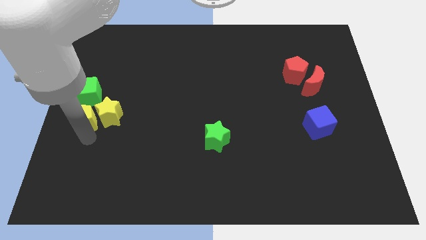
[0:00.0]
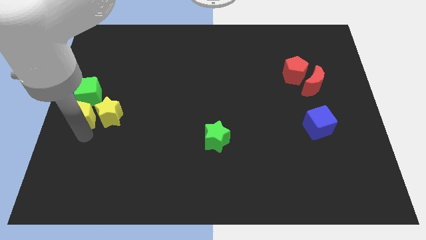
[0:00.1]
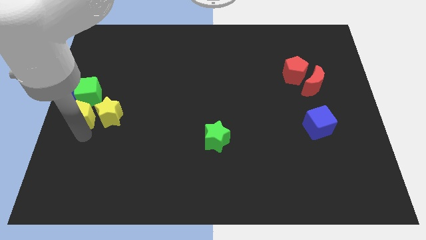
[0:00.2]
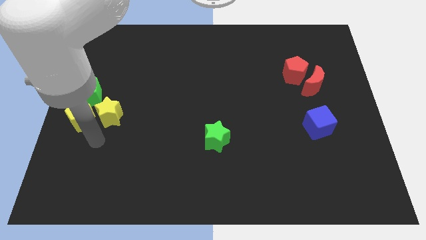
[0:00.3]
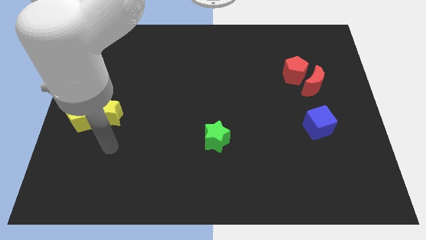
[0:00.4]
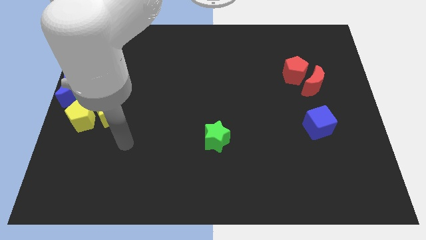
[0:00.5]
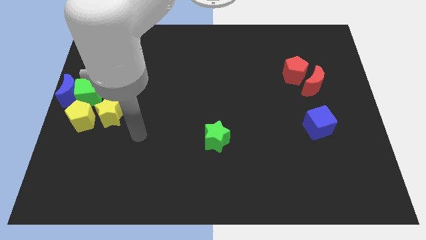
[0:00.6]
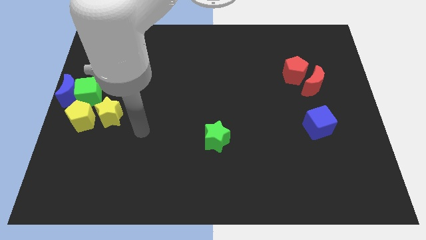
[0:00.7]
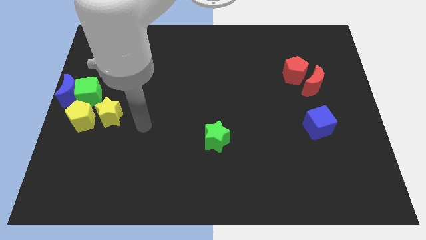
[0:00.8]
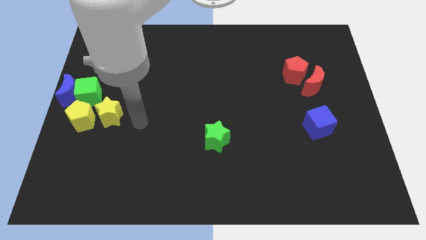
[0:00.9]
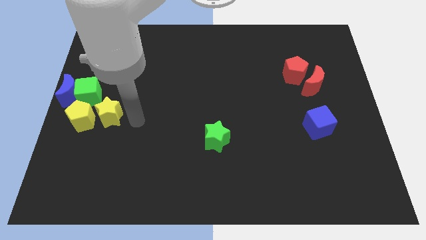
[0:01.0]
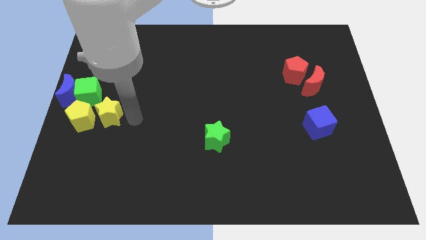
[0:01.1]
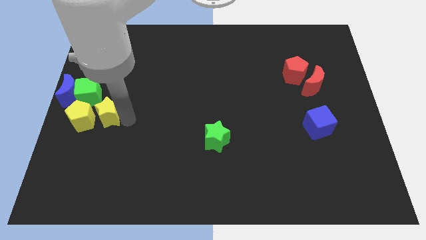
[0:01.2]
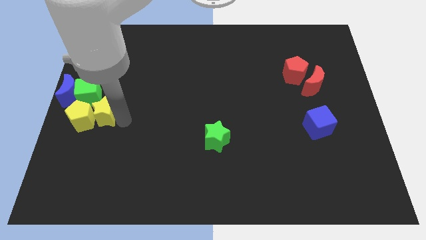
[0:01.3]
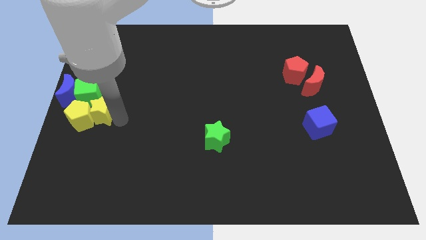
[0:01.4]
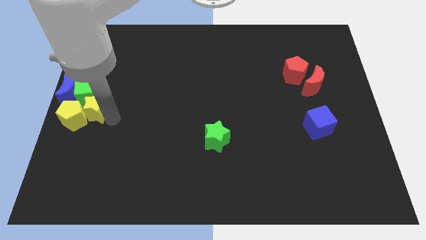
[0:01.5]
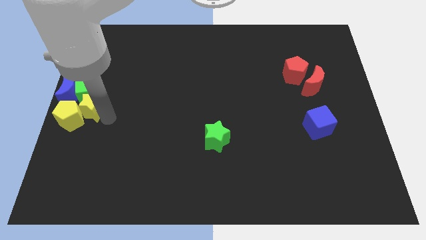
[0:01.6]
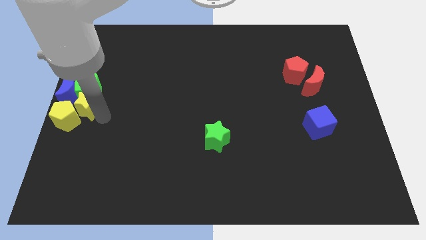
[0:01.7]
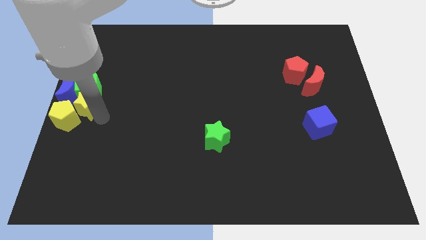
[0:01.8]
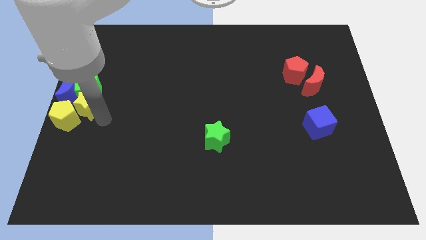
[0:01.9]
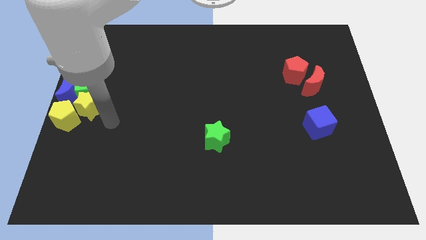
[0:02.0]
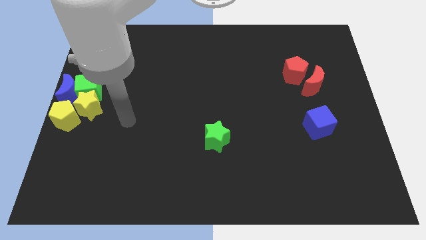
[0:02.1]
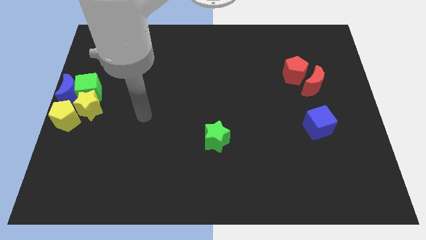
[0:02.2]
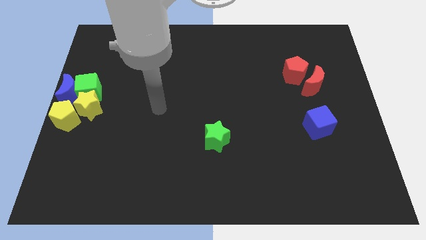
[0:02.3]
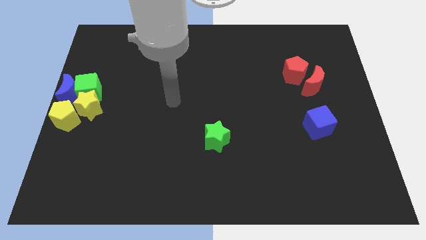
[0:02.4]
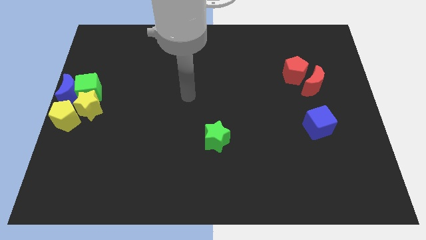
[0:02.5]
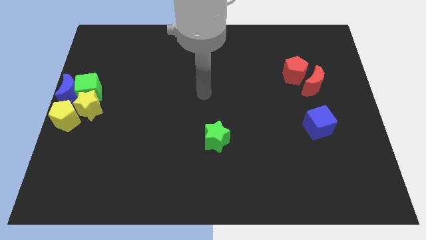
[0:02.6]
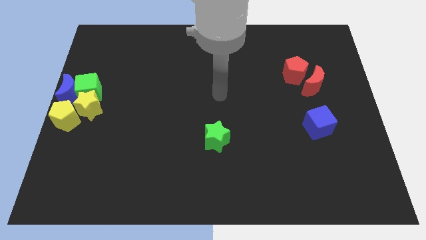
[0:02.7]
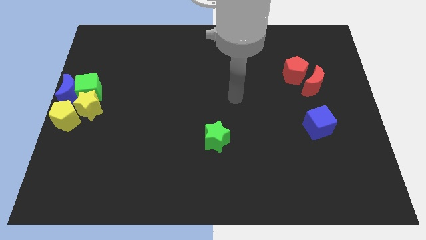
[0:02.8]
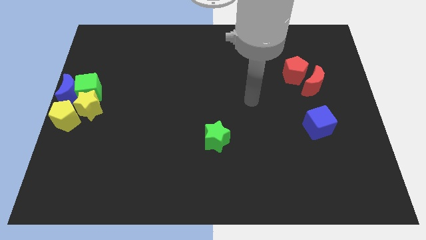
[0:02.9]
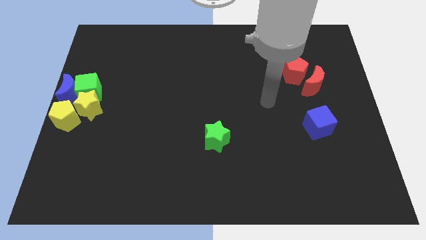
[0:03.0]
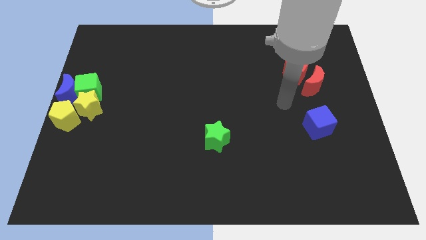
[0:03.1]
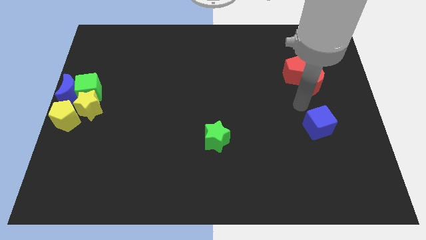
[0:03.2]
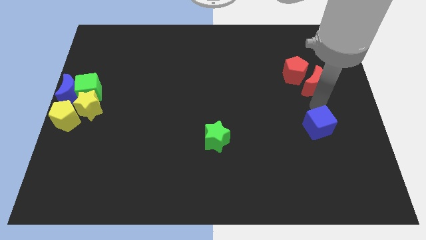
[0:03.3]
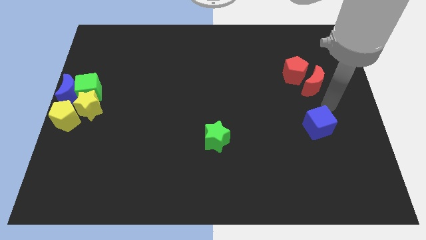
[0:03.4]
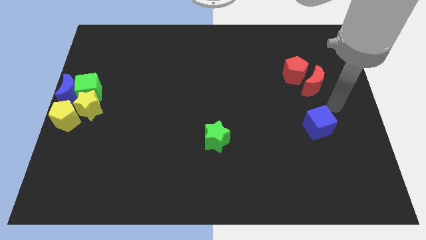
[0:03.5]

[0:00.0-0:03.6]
adjust the yellow blocks to the bottom of the green cube and blue moon

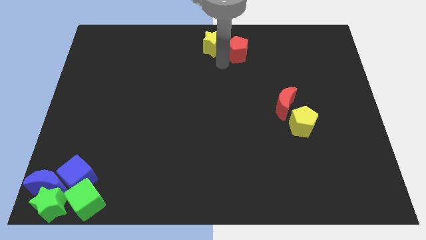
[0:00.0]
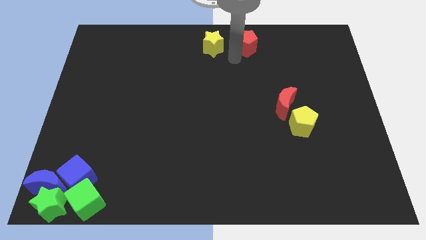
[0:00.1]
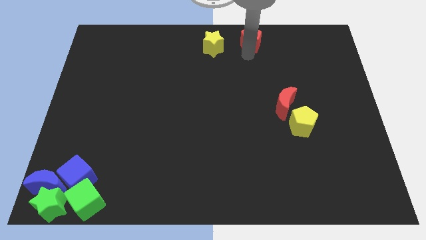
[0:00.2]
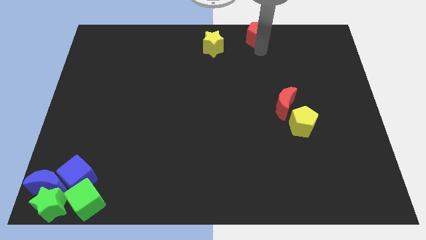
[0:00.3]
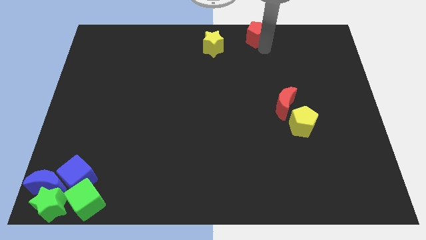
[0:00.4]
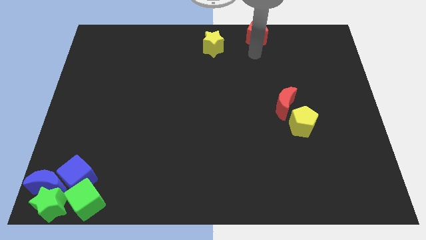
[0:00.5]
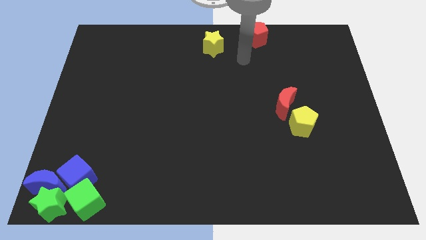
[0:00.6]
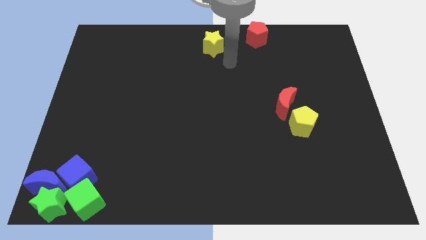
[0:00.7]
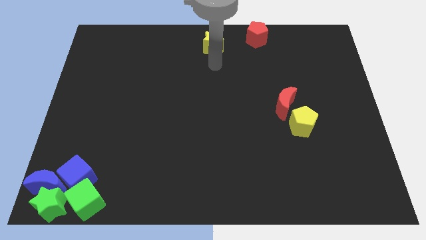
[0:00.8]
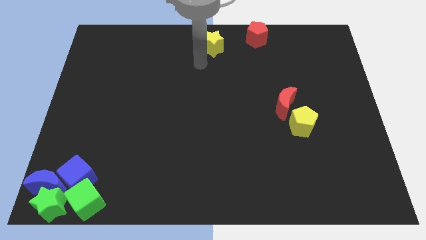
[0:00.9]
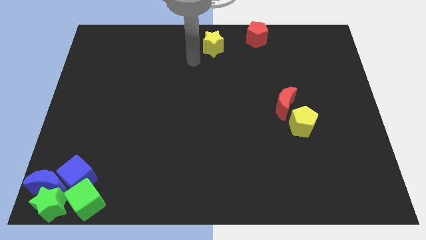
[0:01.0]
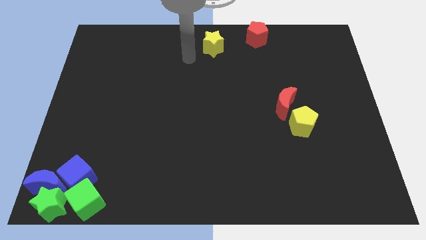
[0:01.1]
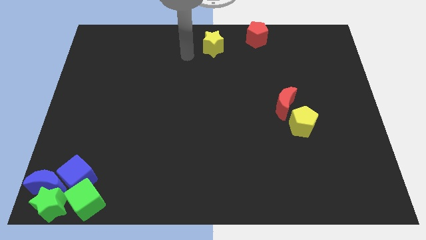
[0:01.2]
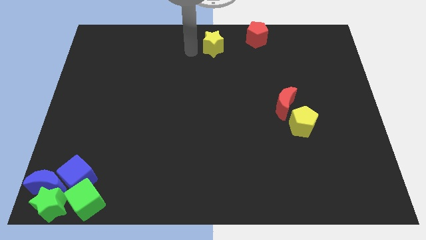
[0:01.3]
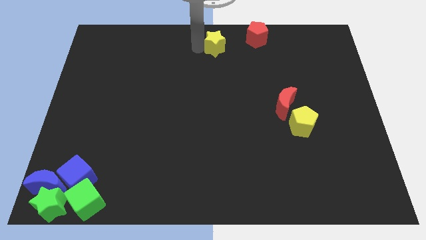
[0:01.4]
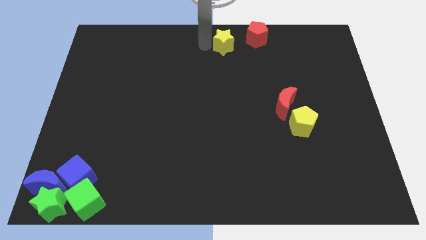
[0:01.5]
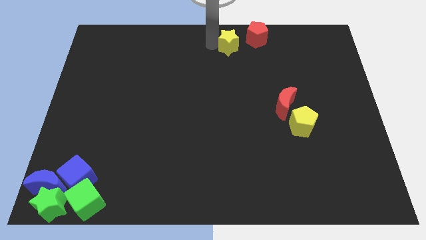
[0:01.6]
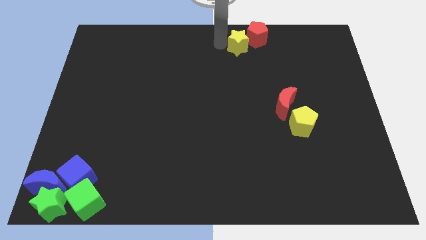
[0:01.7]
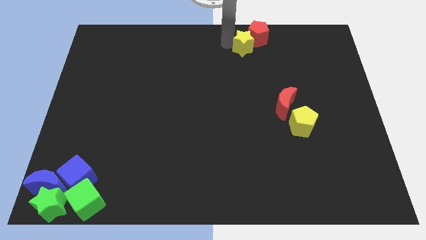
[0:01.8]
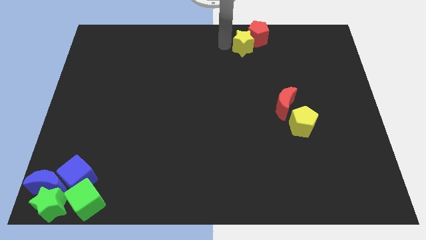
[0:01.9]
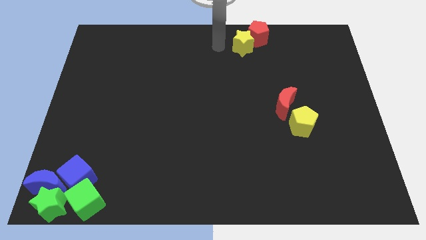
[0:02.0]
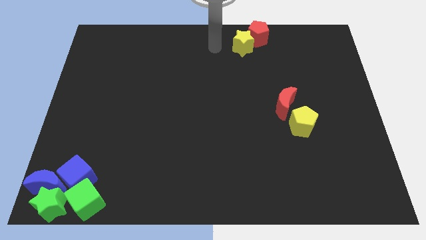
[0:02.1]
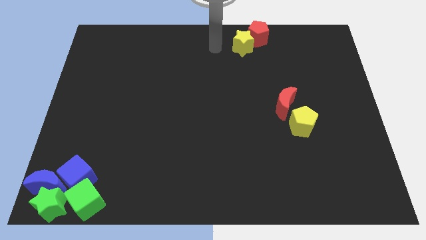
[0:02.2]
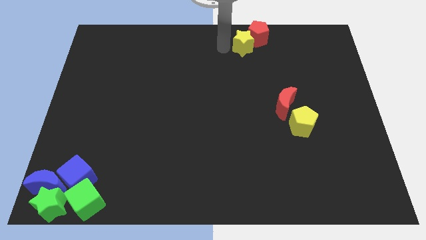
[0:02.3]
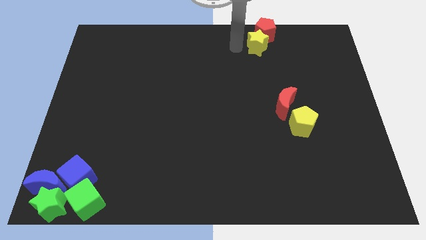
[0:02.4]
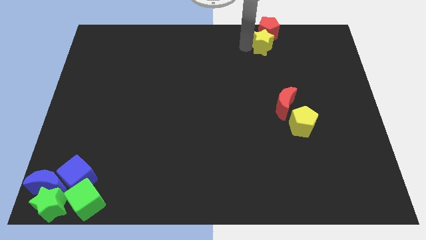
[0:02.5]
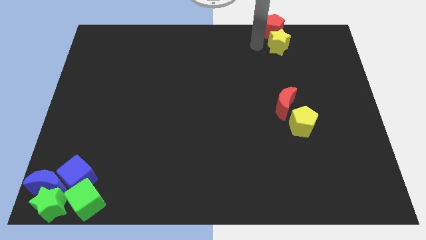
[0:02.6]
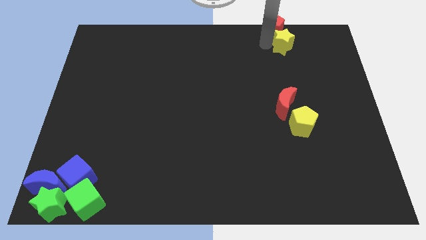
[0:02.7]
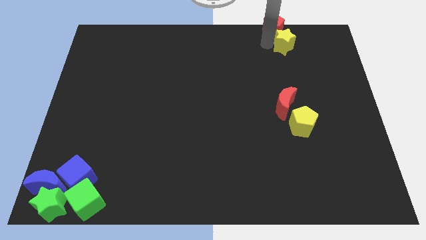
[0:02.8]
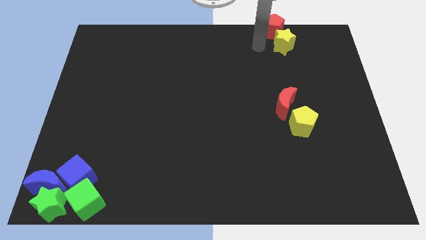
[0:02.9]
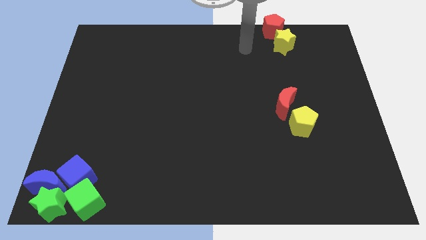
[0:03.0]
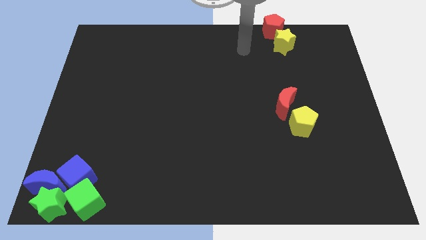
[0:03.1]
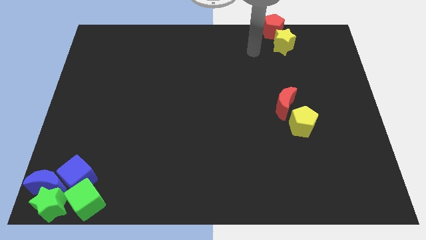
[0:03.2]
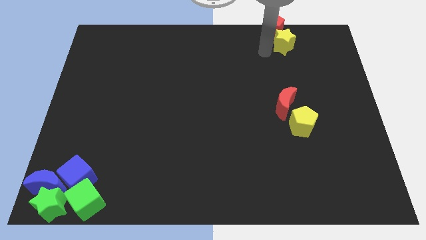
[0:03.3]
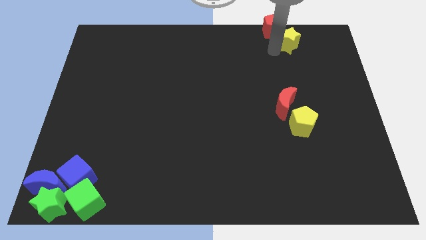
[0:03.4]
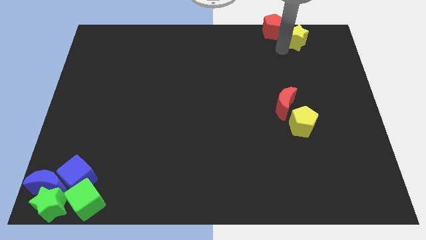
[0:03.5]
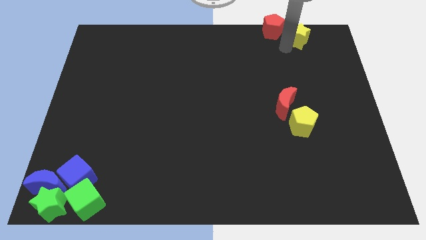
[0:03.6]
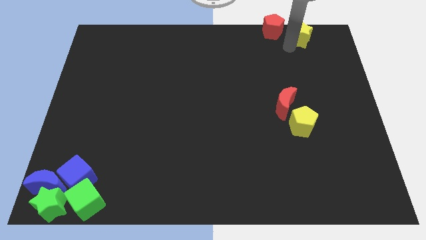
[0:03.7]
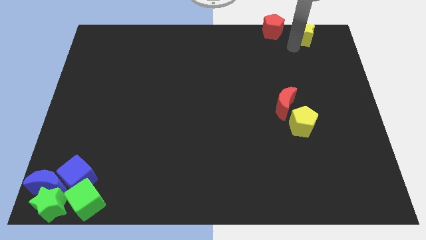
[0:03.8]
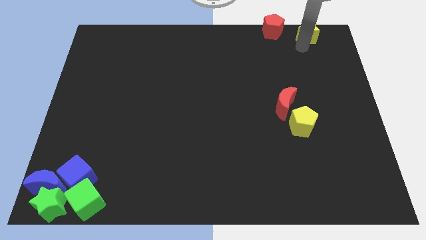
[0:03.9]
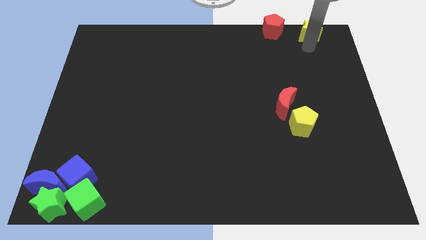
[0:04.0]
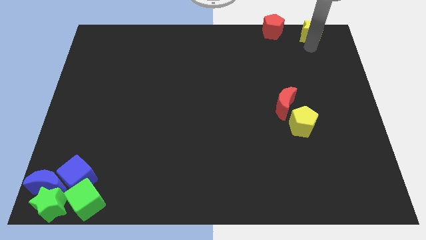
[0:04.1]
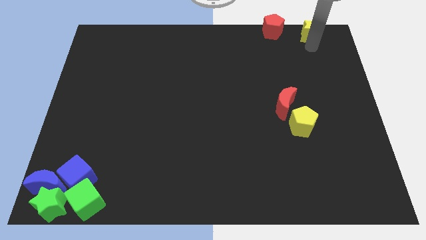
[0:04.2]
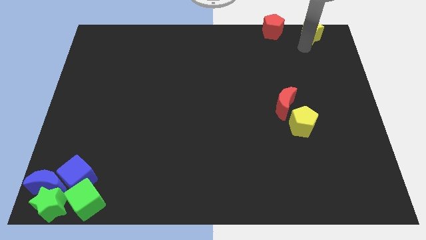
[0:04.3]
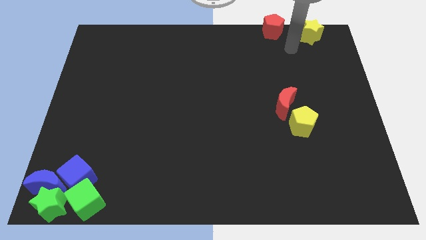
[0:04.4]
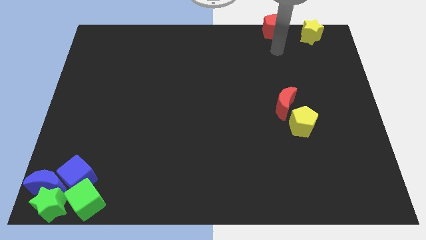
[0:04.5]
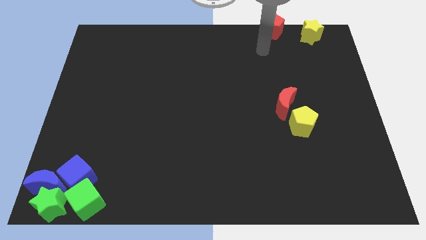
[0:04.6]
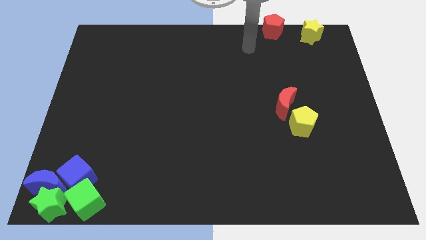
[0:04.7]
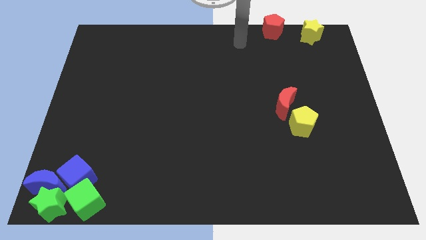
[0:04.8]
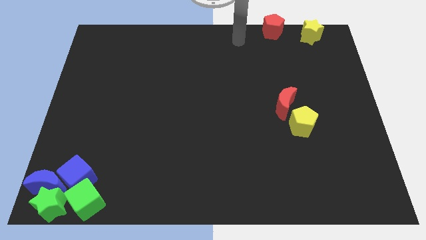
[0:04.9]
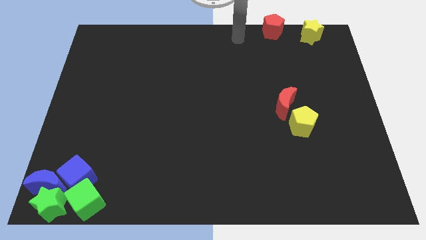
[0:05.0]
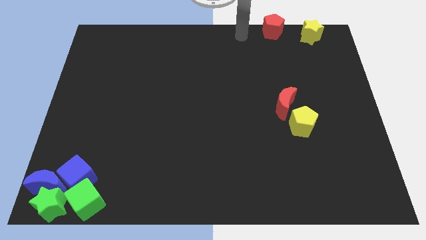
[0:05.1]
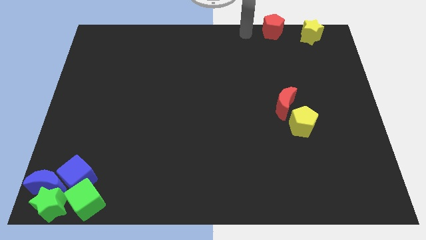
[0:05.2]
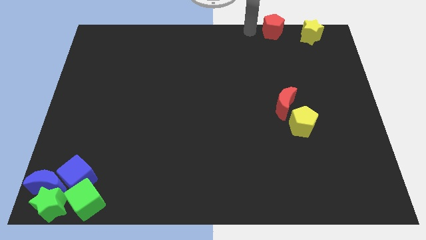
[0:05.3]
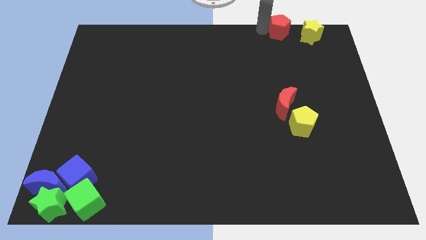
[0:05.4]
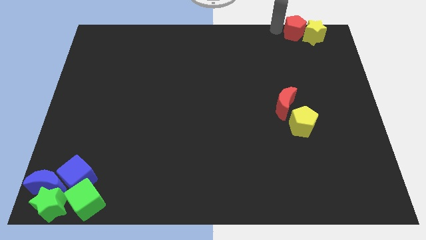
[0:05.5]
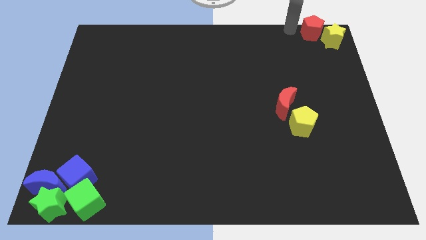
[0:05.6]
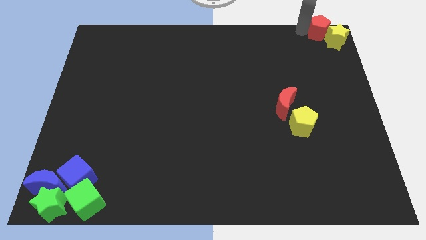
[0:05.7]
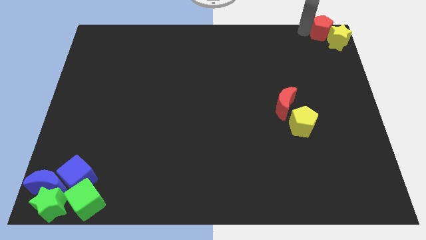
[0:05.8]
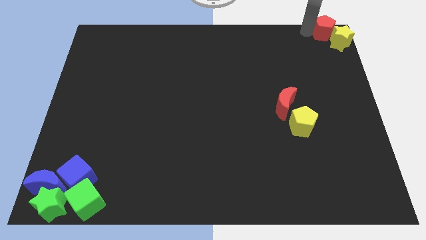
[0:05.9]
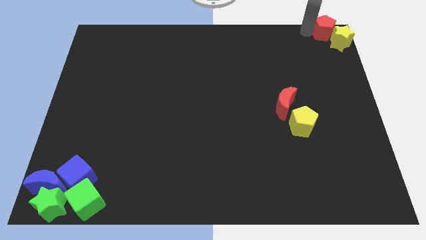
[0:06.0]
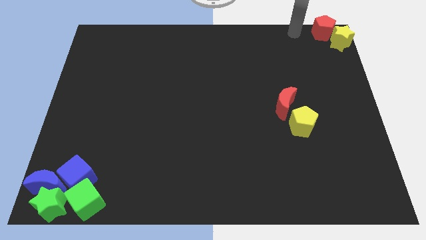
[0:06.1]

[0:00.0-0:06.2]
move the red pentagon and yellow star to the top right corner
